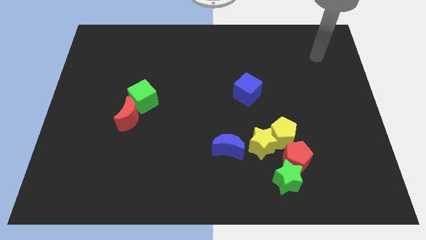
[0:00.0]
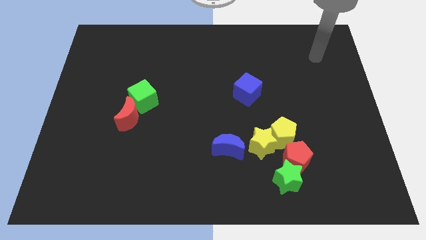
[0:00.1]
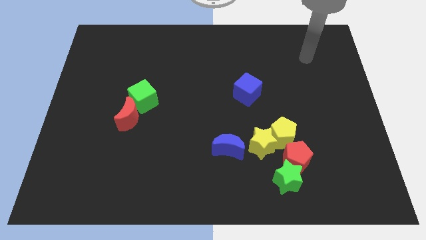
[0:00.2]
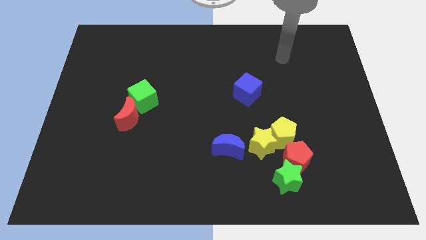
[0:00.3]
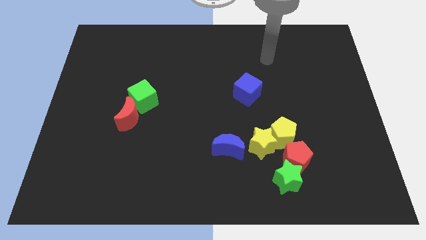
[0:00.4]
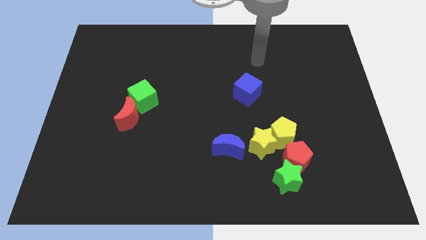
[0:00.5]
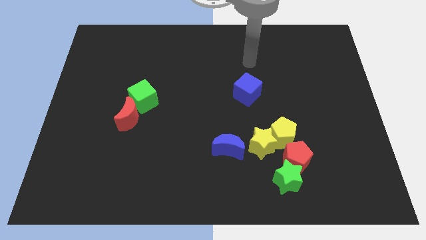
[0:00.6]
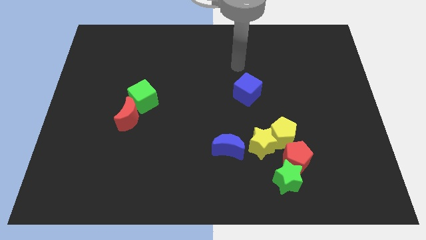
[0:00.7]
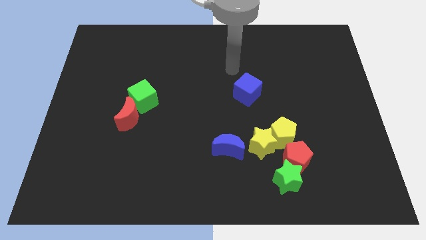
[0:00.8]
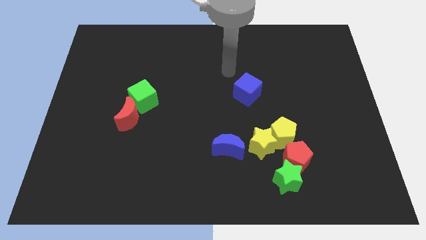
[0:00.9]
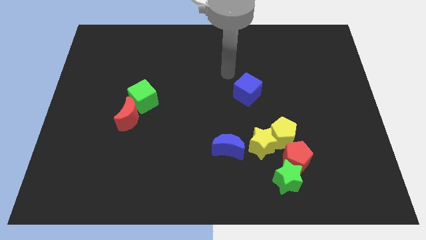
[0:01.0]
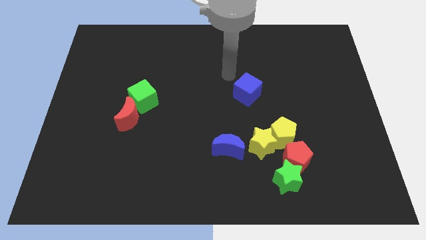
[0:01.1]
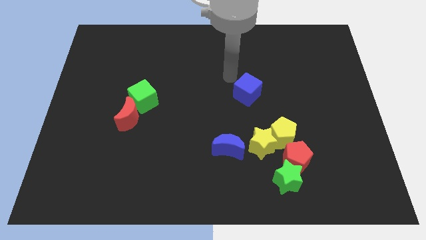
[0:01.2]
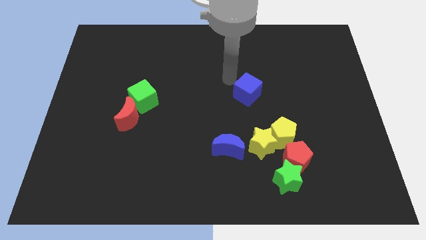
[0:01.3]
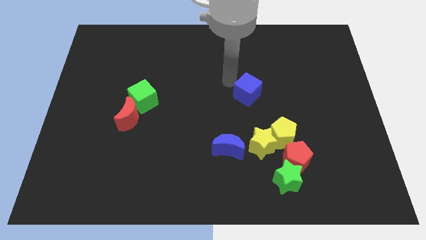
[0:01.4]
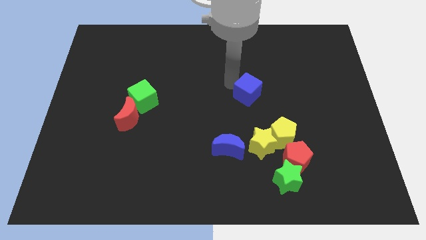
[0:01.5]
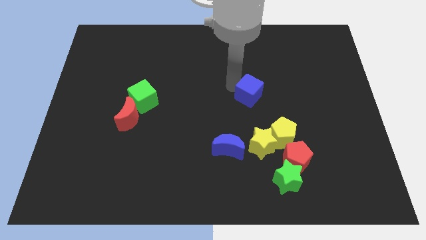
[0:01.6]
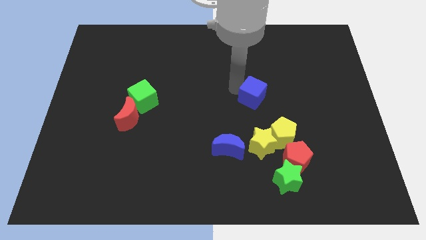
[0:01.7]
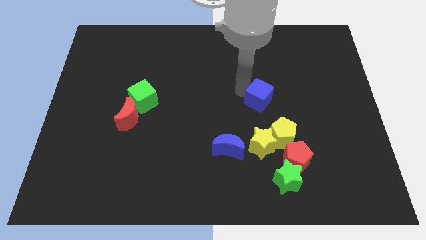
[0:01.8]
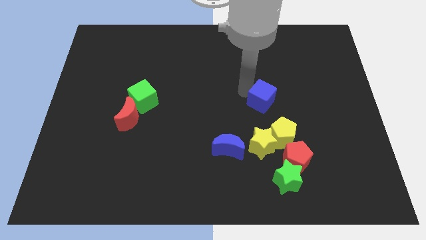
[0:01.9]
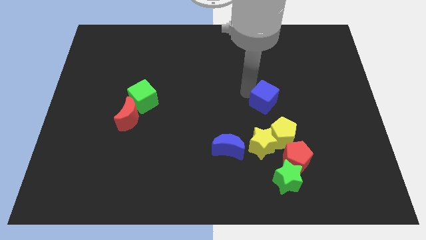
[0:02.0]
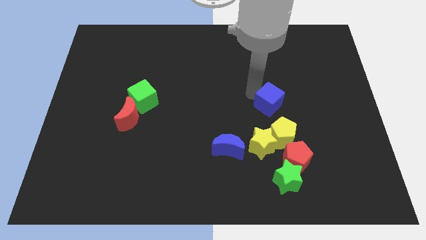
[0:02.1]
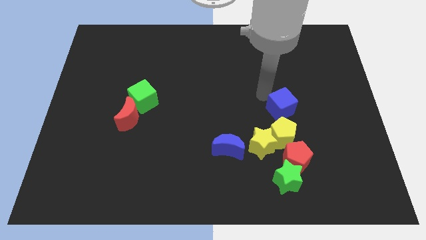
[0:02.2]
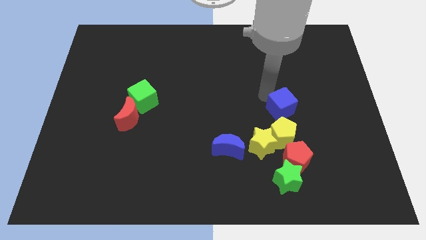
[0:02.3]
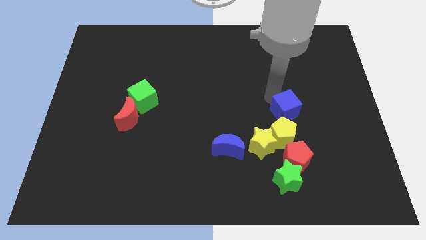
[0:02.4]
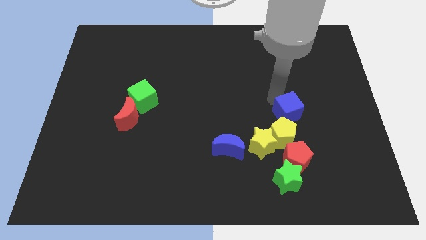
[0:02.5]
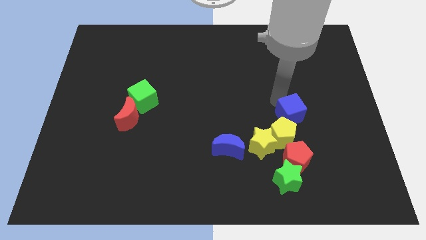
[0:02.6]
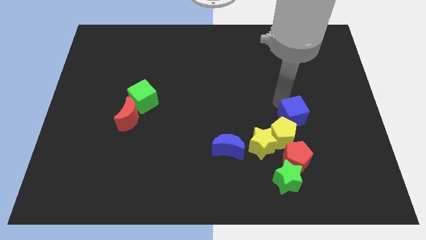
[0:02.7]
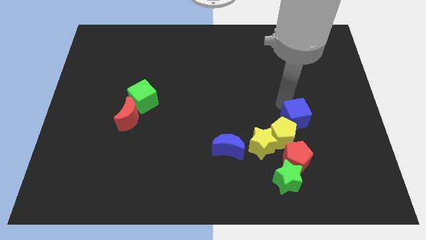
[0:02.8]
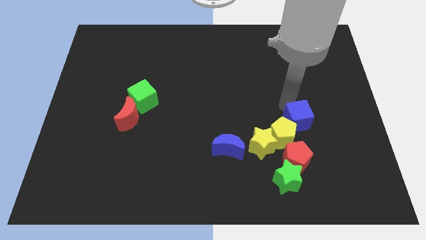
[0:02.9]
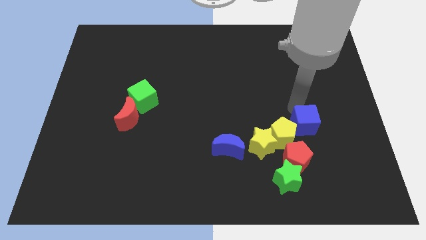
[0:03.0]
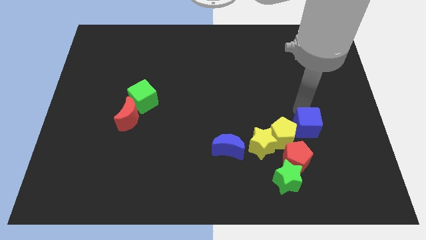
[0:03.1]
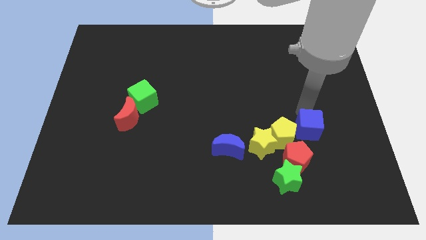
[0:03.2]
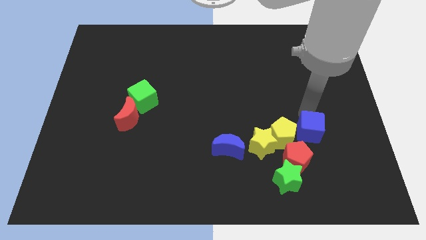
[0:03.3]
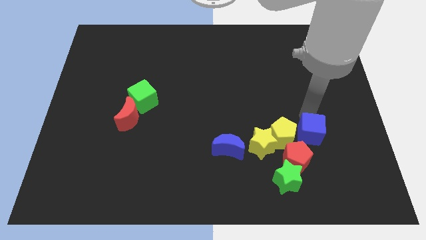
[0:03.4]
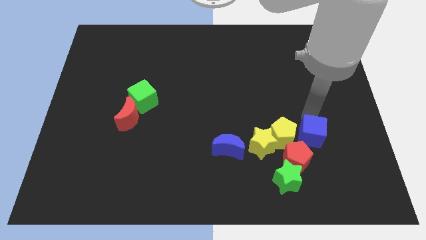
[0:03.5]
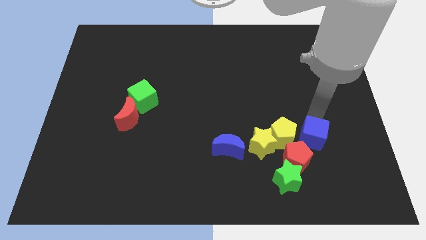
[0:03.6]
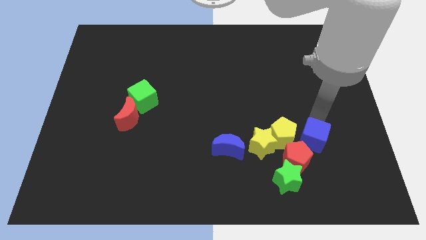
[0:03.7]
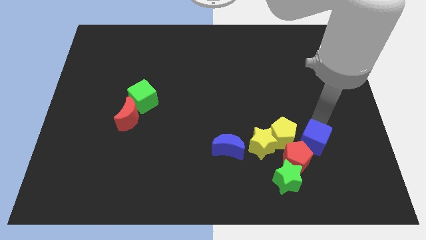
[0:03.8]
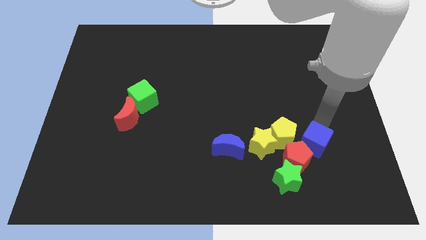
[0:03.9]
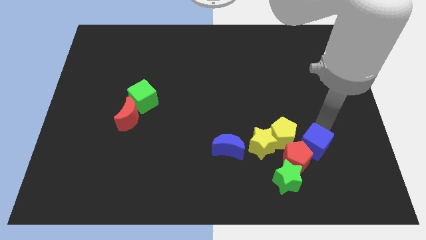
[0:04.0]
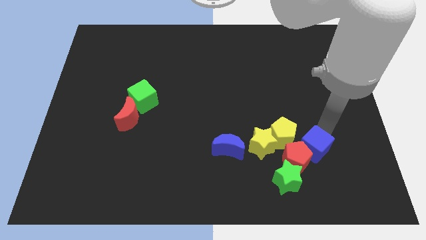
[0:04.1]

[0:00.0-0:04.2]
push the blue cube next to the red pentagon

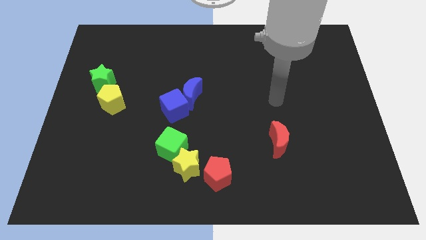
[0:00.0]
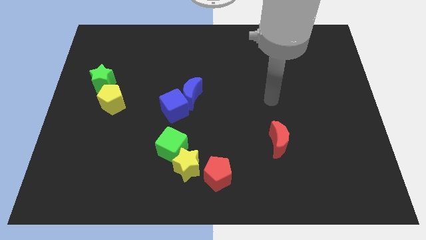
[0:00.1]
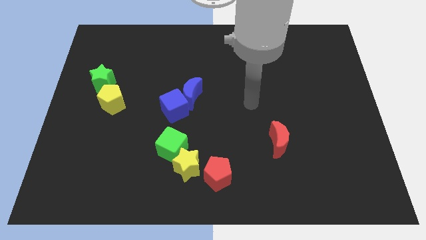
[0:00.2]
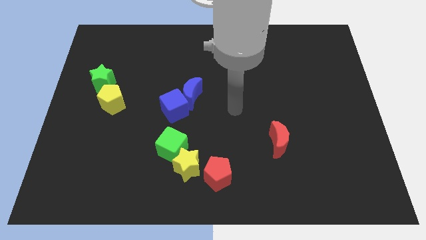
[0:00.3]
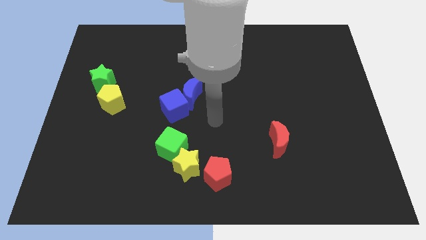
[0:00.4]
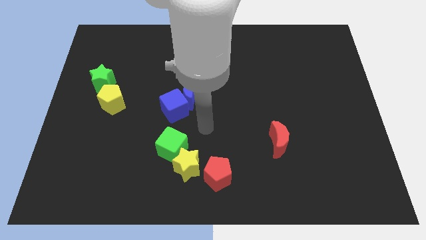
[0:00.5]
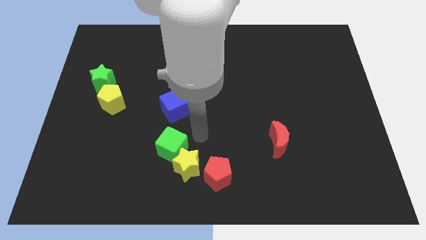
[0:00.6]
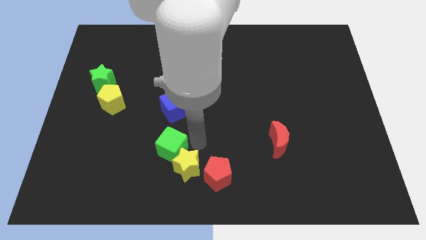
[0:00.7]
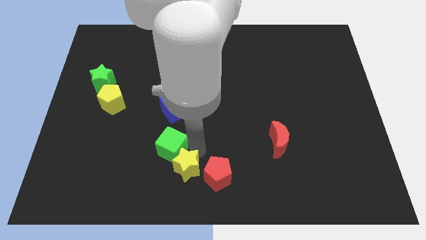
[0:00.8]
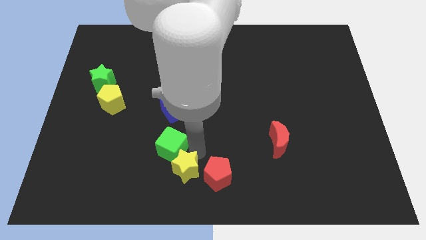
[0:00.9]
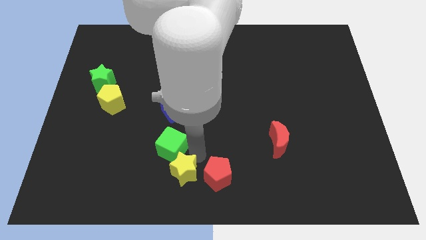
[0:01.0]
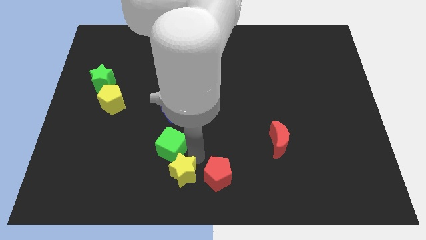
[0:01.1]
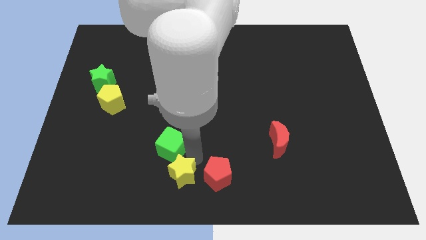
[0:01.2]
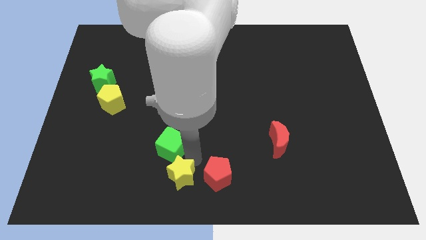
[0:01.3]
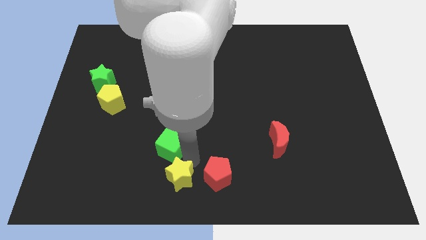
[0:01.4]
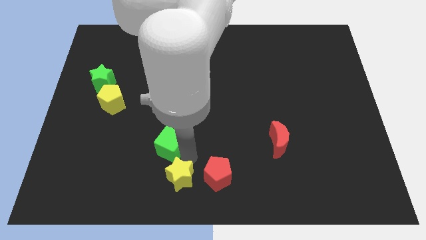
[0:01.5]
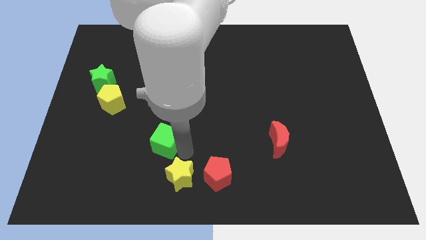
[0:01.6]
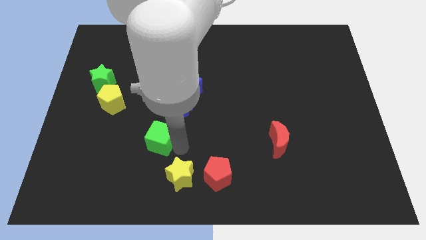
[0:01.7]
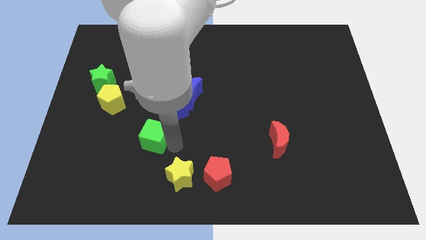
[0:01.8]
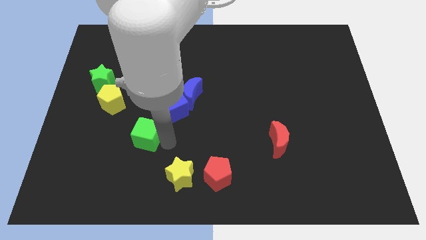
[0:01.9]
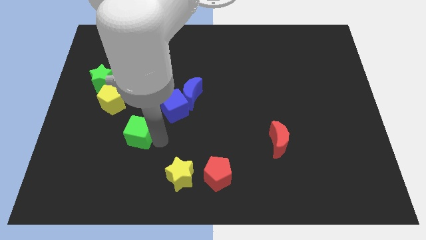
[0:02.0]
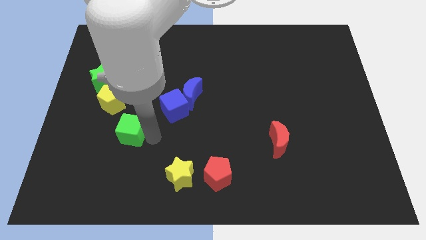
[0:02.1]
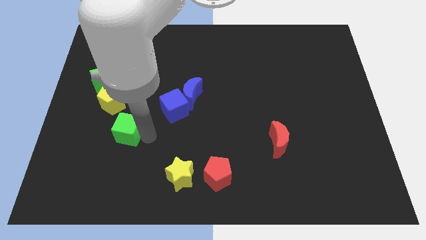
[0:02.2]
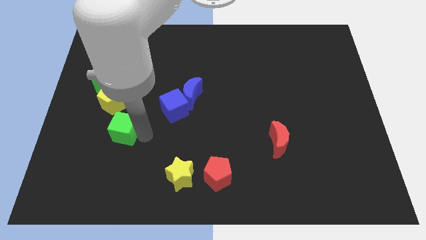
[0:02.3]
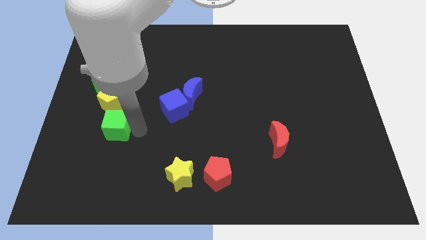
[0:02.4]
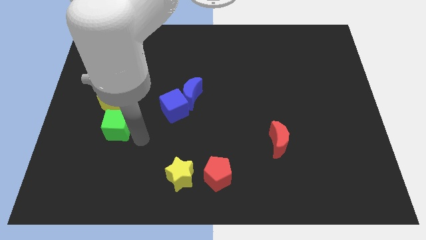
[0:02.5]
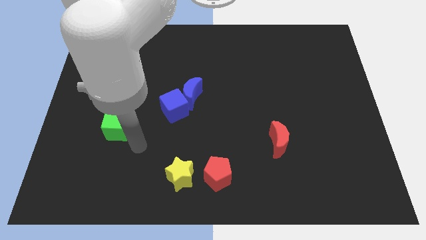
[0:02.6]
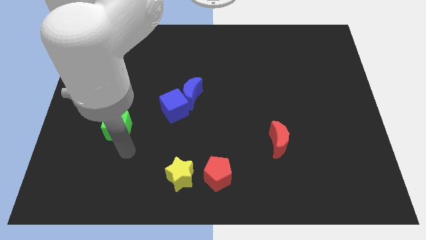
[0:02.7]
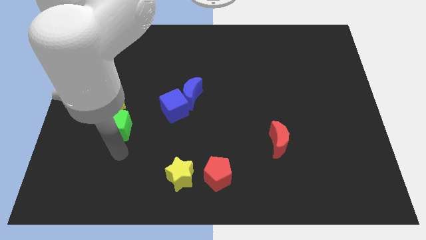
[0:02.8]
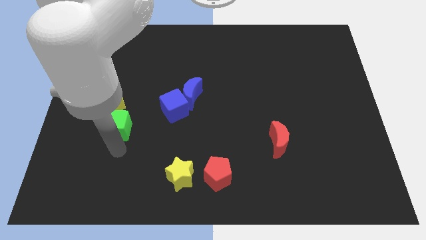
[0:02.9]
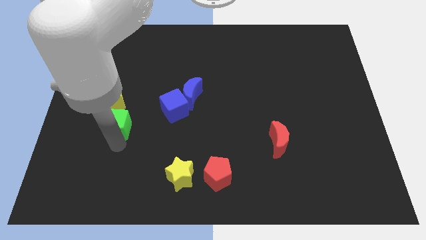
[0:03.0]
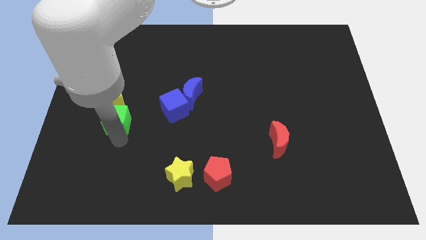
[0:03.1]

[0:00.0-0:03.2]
move the green cube to the yellow pentagon

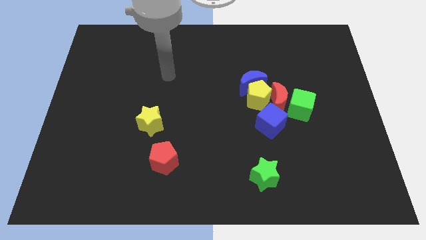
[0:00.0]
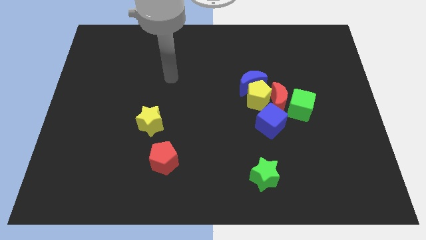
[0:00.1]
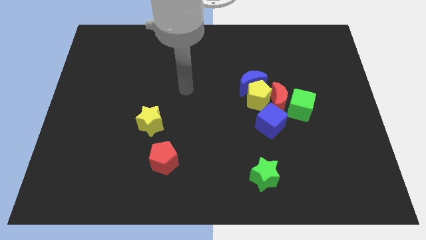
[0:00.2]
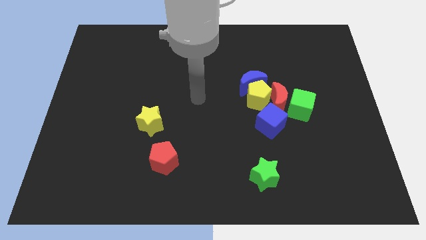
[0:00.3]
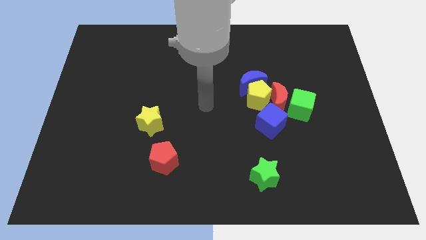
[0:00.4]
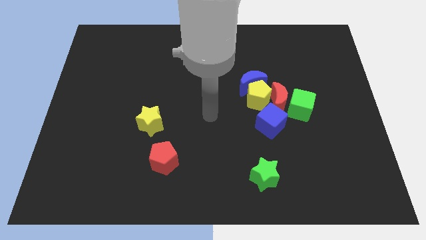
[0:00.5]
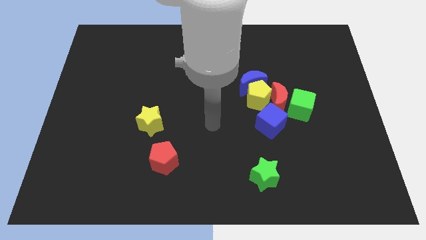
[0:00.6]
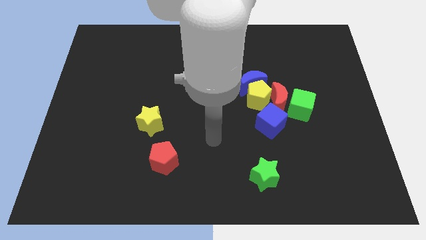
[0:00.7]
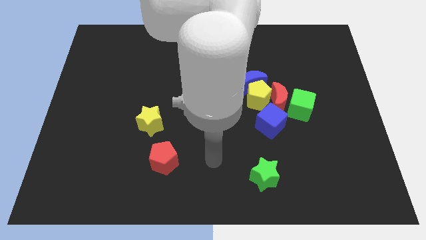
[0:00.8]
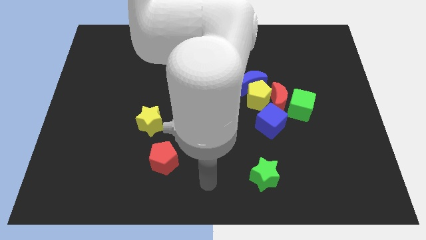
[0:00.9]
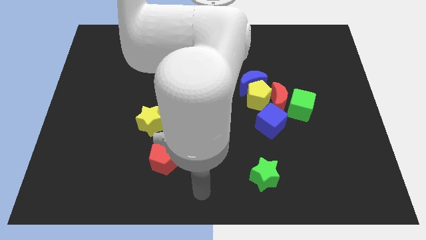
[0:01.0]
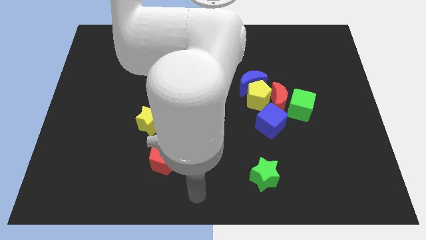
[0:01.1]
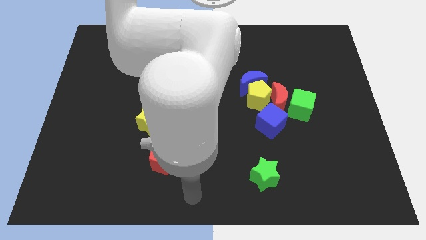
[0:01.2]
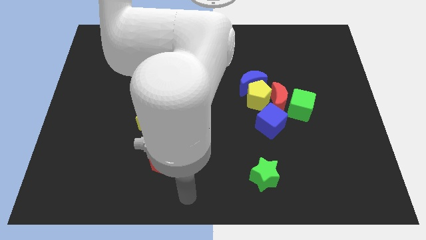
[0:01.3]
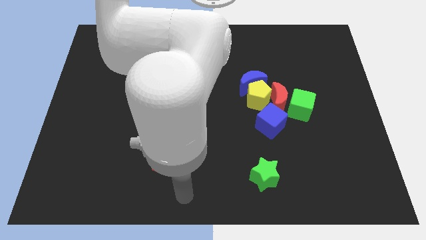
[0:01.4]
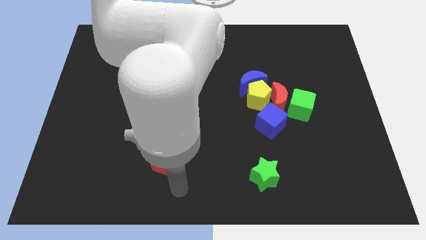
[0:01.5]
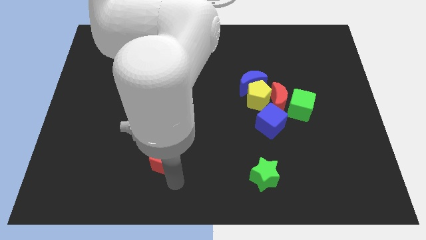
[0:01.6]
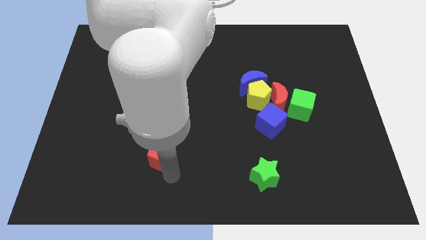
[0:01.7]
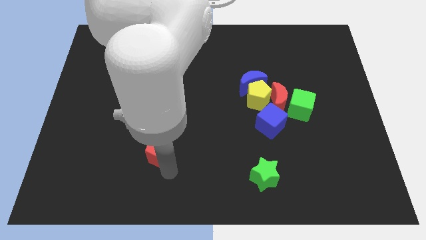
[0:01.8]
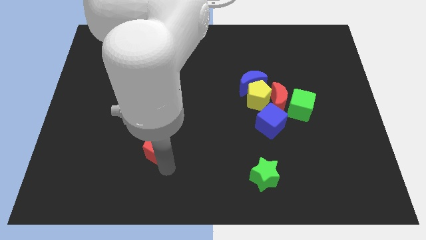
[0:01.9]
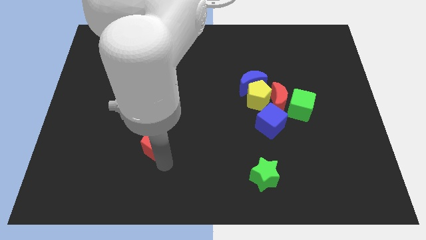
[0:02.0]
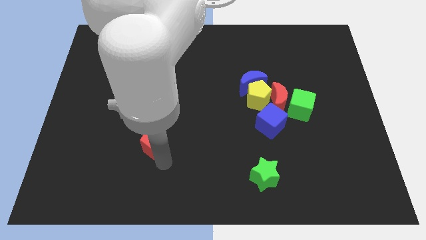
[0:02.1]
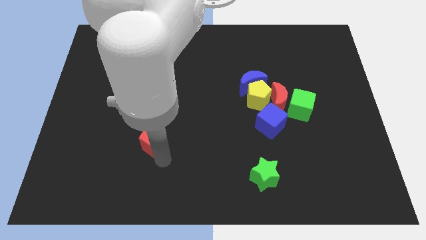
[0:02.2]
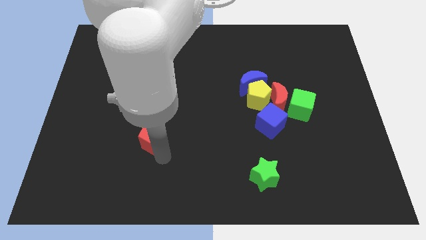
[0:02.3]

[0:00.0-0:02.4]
slide the red pentagon next to the yellow star
